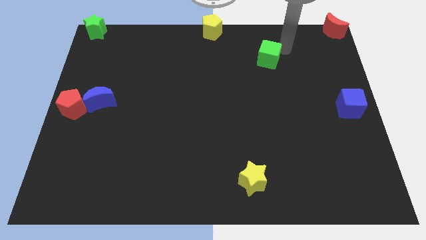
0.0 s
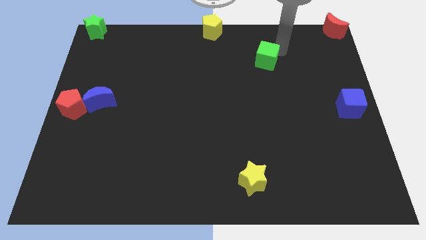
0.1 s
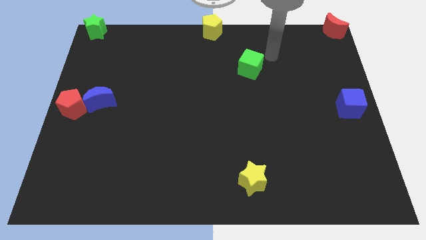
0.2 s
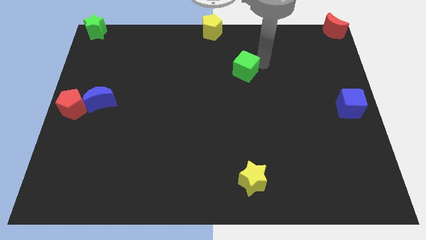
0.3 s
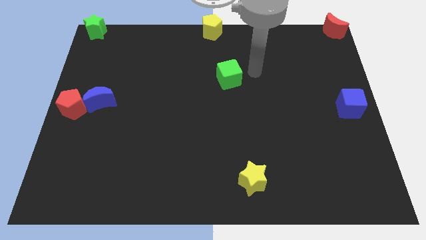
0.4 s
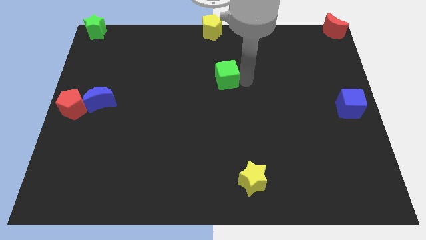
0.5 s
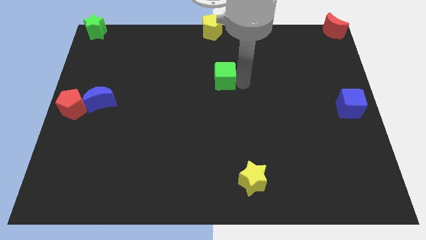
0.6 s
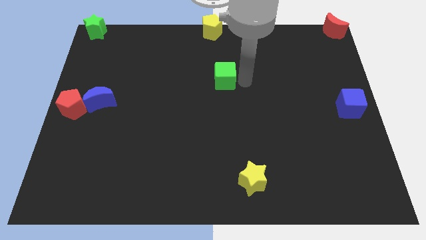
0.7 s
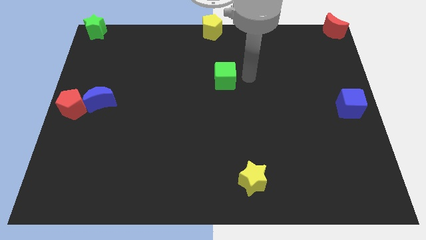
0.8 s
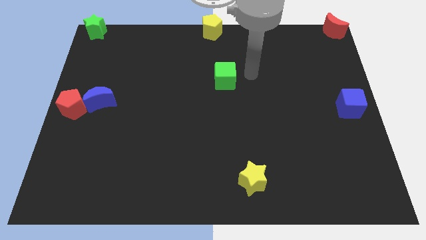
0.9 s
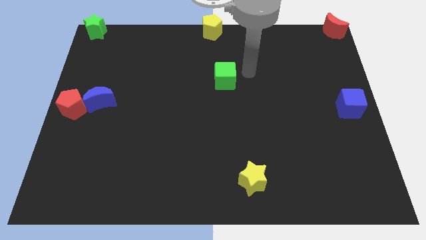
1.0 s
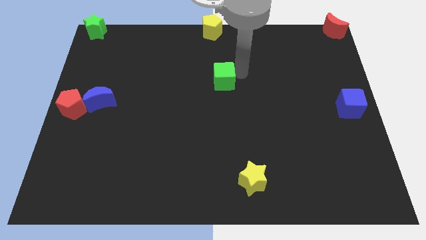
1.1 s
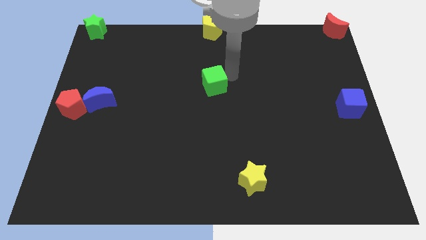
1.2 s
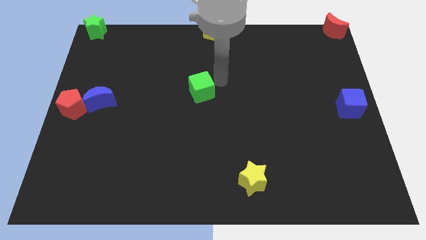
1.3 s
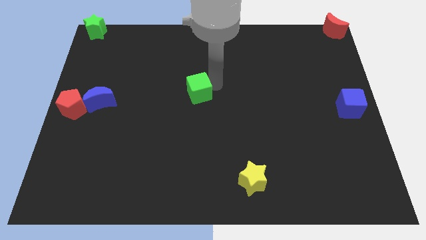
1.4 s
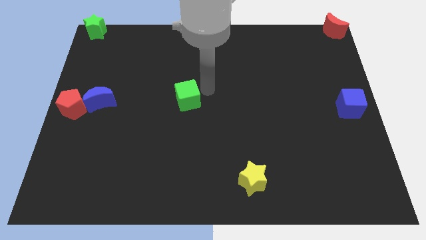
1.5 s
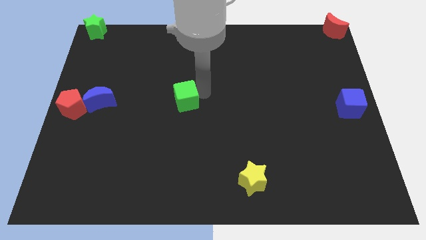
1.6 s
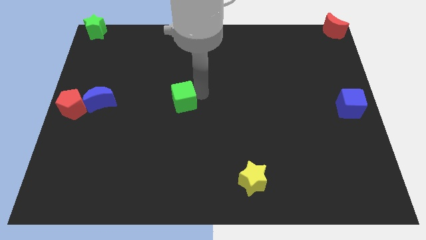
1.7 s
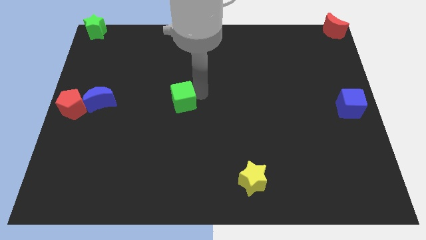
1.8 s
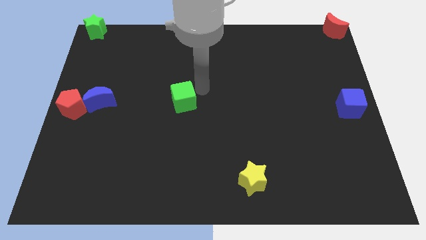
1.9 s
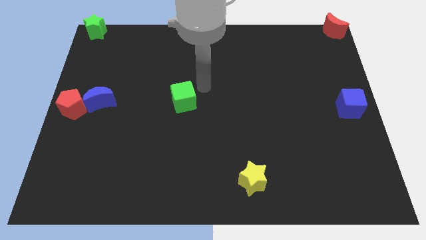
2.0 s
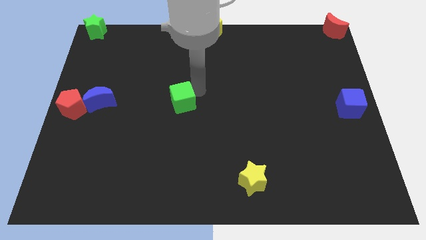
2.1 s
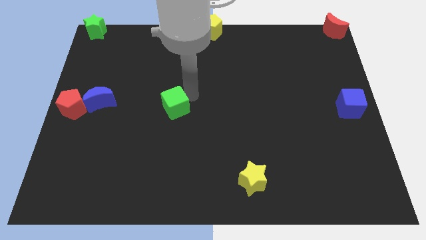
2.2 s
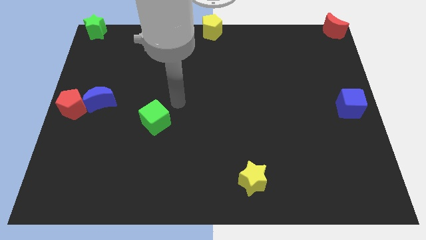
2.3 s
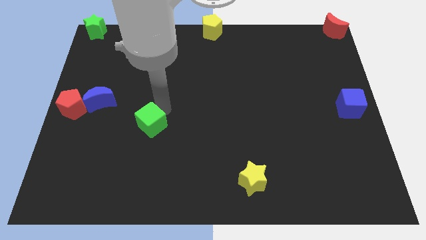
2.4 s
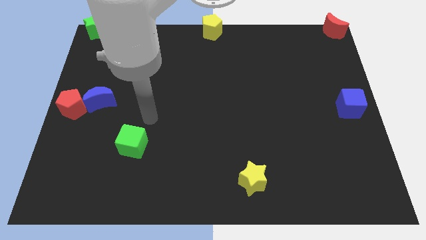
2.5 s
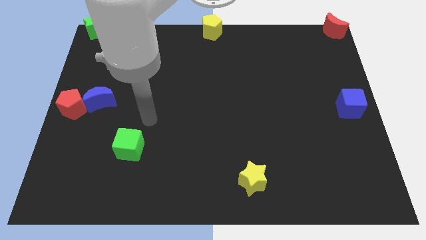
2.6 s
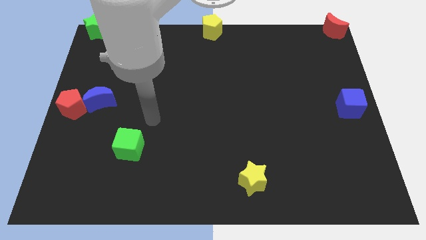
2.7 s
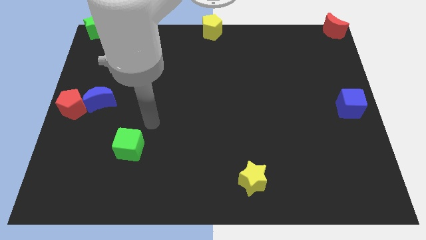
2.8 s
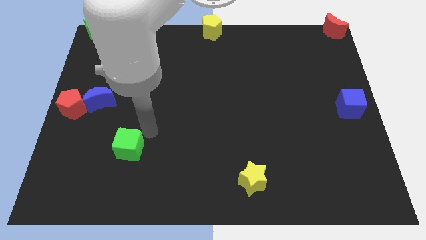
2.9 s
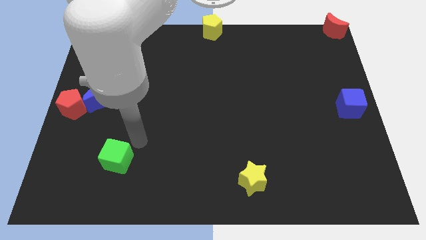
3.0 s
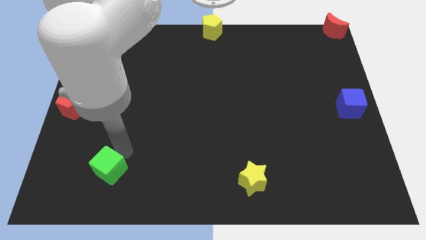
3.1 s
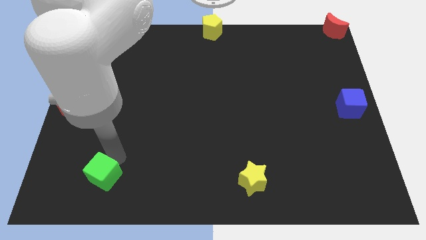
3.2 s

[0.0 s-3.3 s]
push green cube below blue crescent

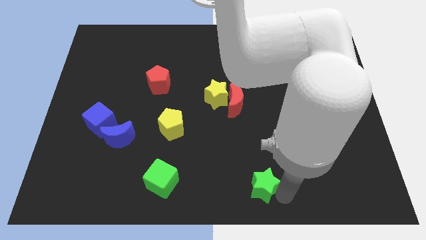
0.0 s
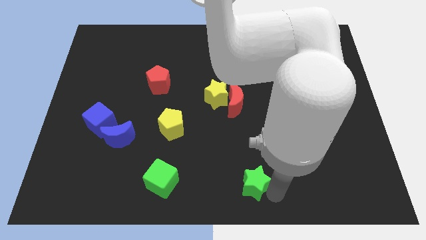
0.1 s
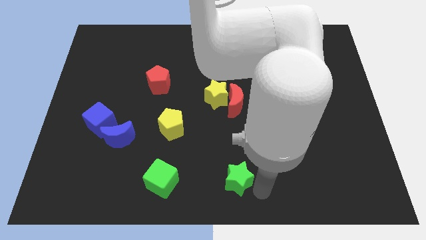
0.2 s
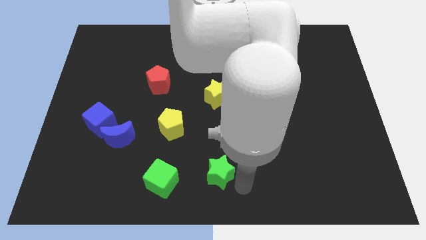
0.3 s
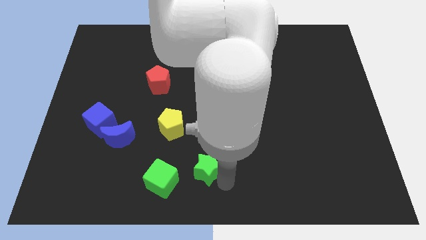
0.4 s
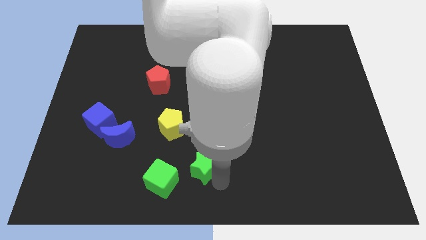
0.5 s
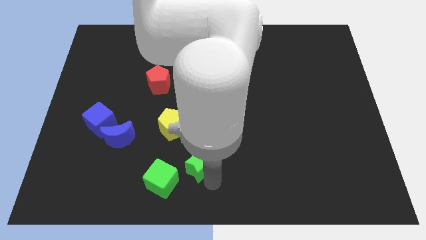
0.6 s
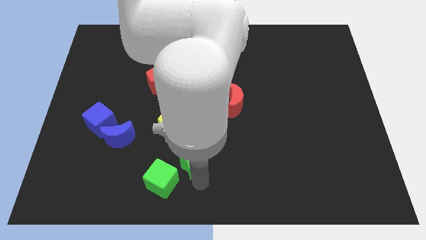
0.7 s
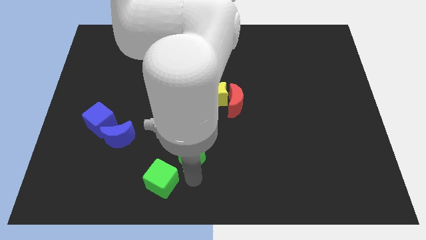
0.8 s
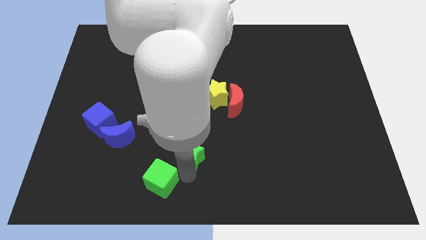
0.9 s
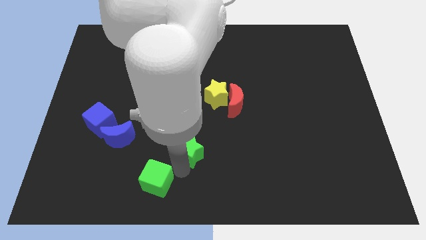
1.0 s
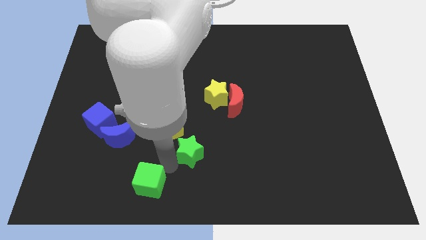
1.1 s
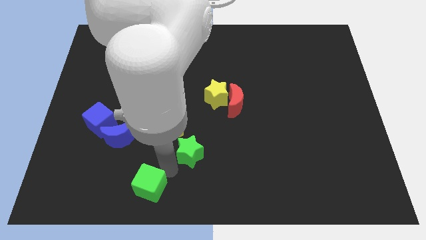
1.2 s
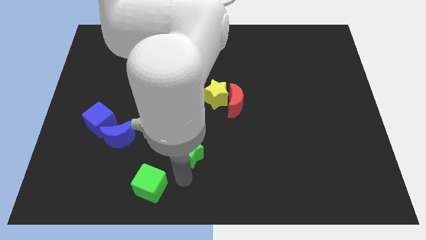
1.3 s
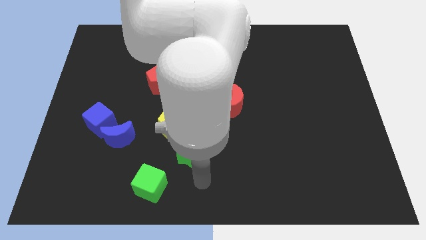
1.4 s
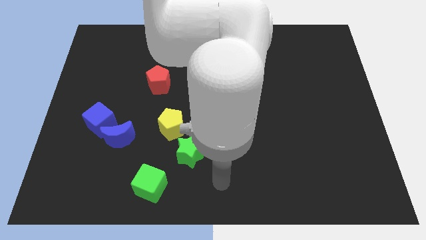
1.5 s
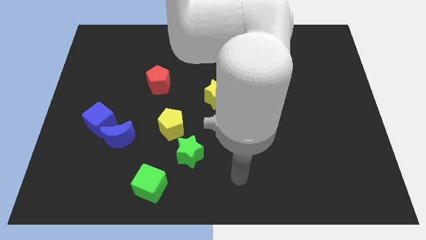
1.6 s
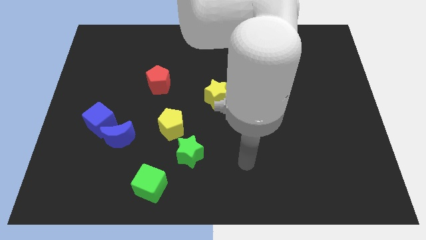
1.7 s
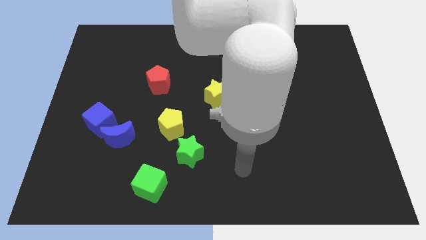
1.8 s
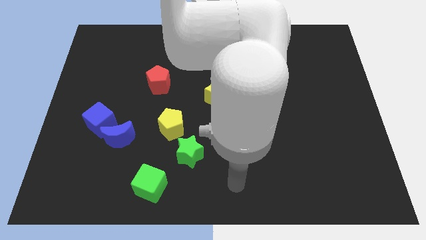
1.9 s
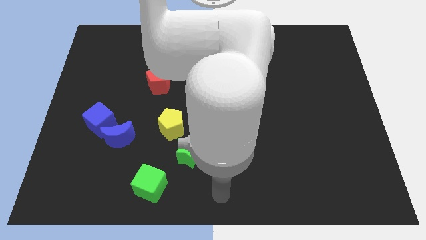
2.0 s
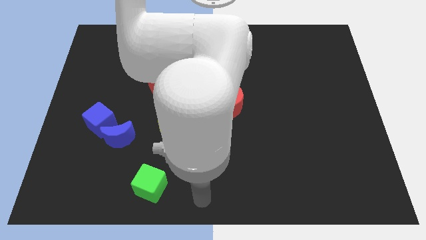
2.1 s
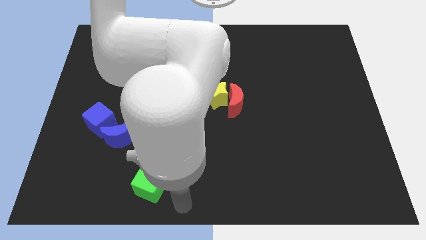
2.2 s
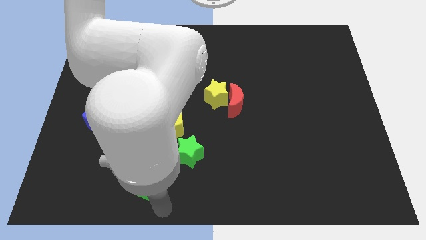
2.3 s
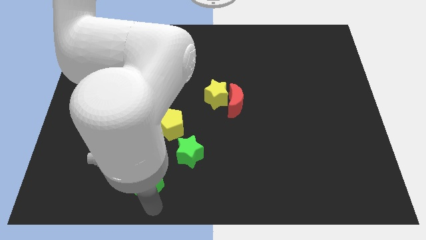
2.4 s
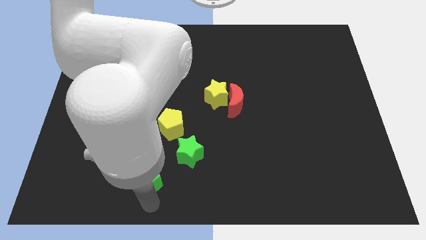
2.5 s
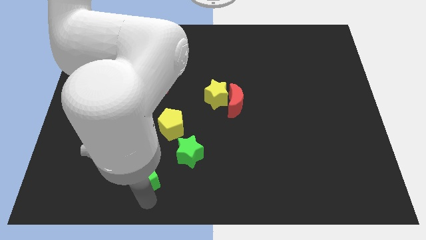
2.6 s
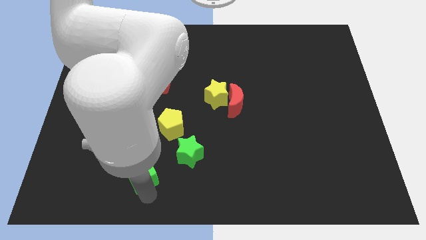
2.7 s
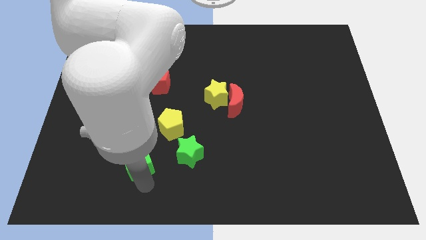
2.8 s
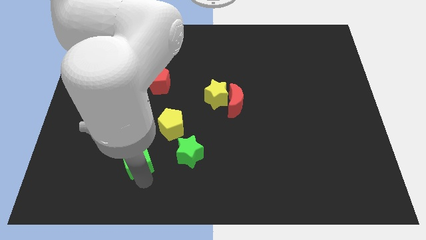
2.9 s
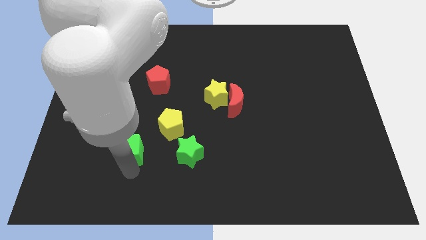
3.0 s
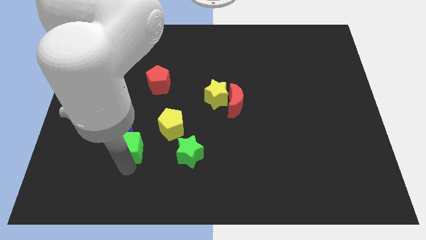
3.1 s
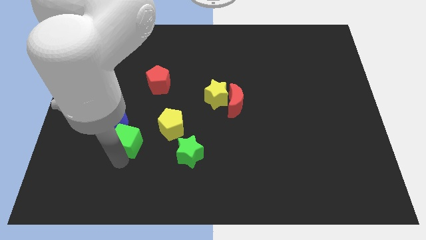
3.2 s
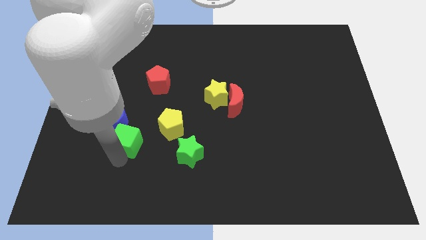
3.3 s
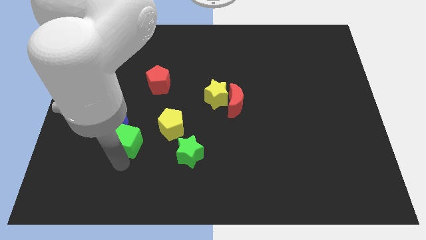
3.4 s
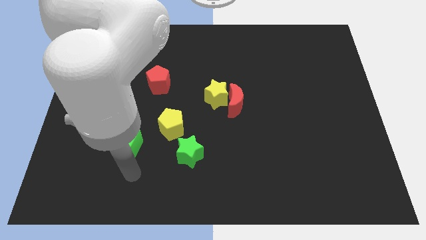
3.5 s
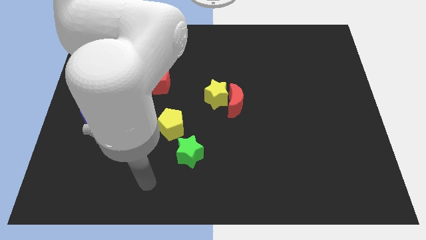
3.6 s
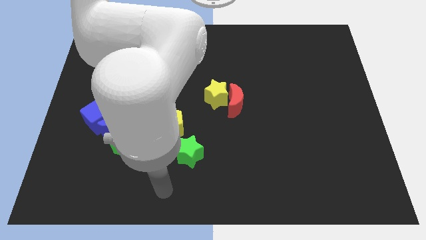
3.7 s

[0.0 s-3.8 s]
move the green cube near the blue moon

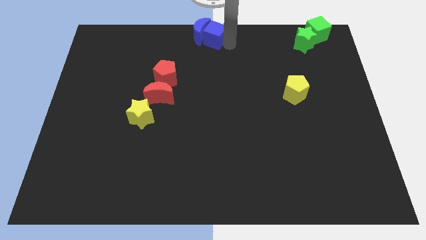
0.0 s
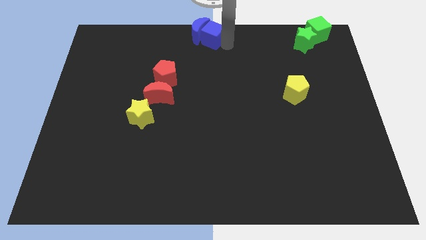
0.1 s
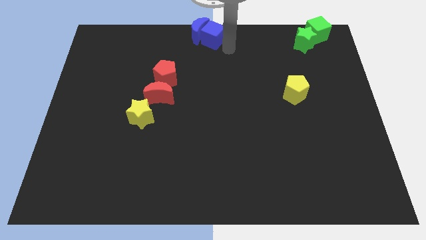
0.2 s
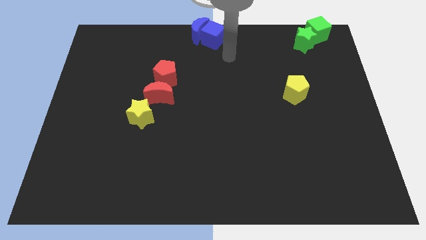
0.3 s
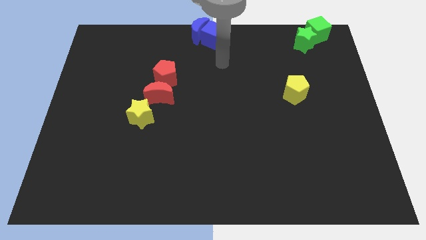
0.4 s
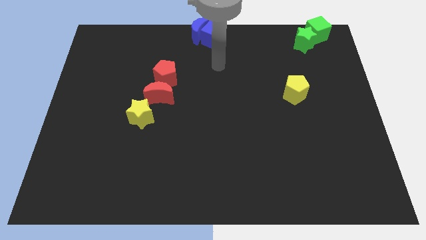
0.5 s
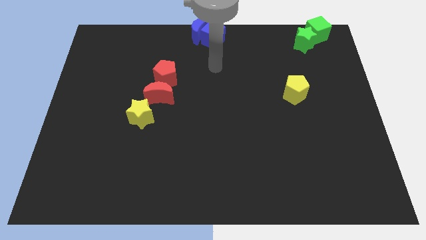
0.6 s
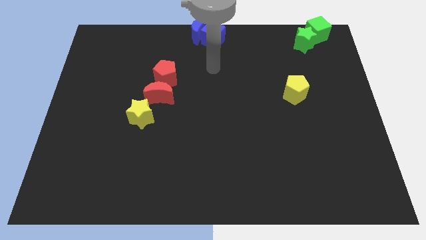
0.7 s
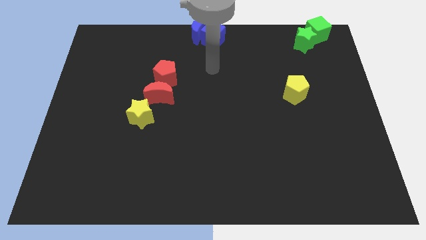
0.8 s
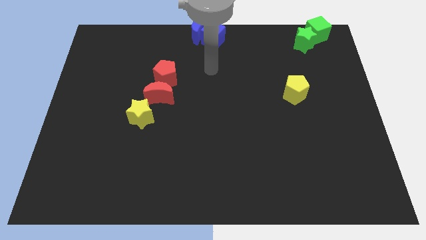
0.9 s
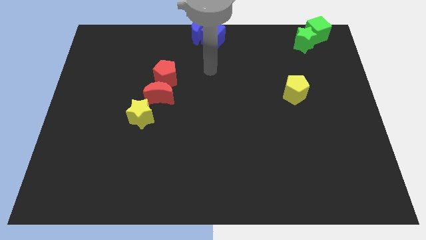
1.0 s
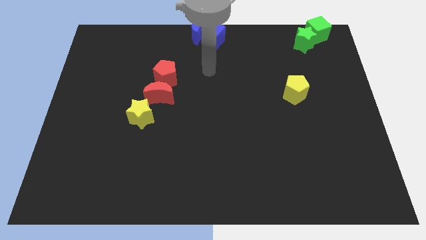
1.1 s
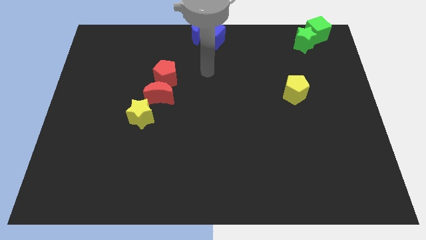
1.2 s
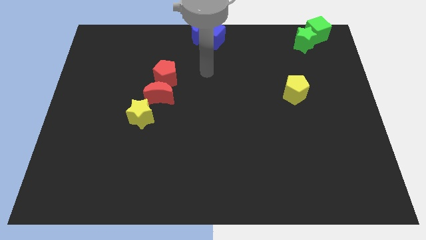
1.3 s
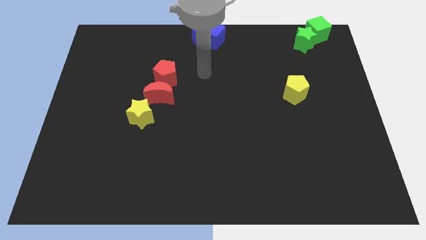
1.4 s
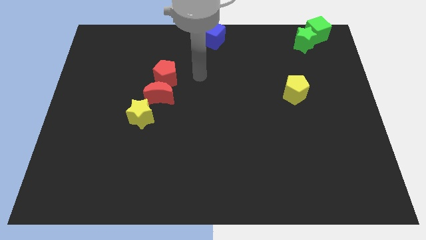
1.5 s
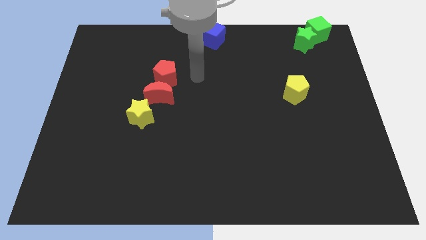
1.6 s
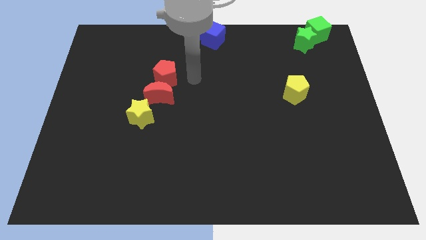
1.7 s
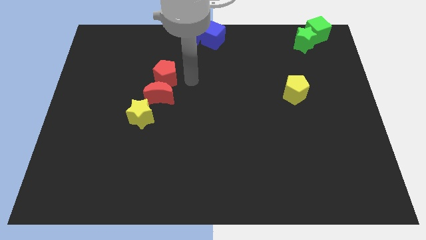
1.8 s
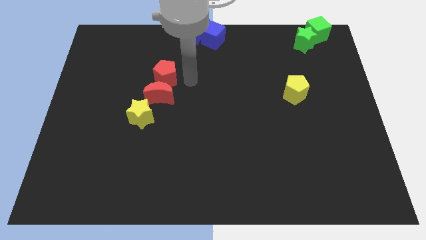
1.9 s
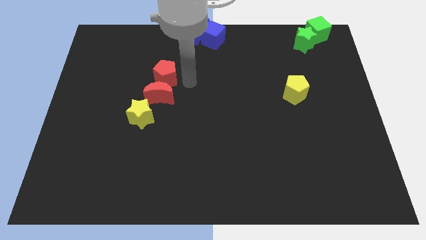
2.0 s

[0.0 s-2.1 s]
move your arm away from the top center
